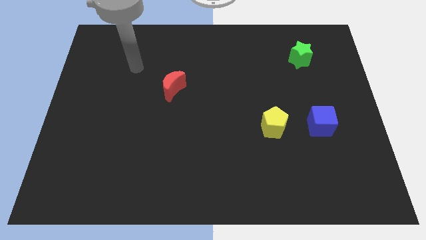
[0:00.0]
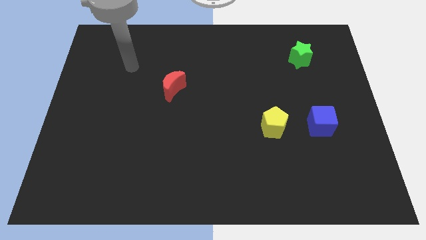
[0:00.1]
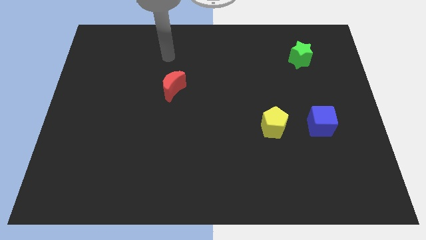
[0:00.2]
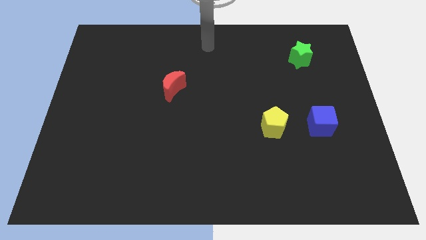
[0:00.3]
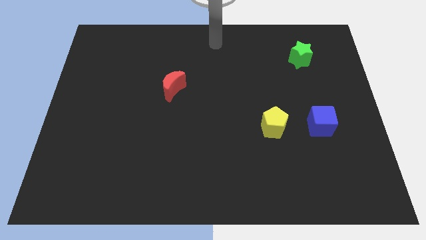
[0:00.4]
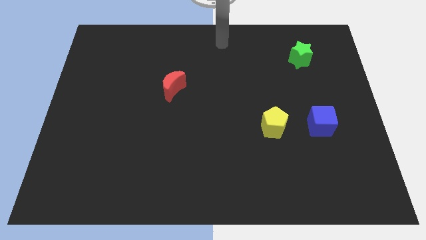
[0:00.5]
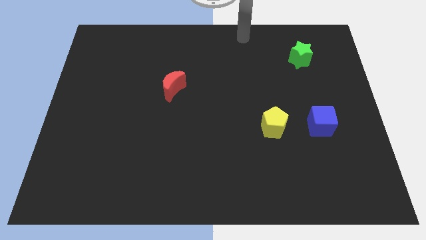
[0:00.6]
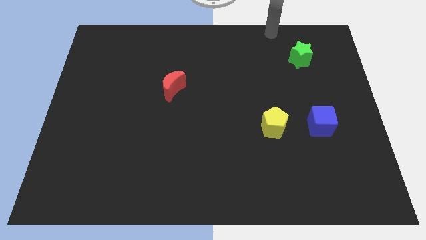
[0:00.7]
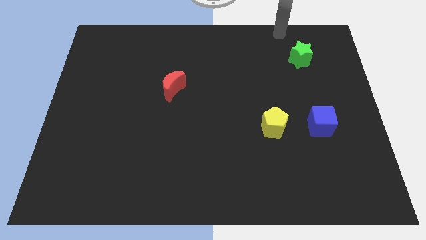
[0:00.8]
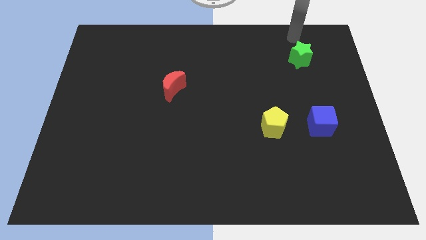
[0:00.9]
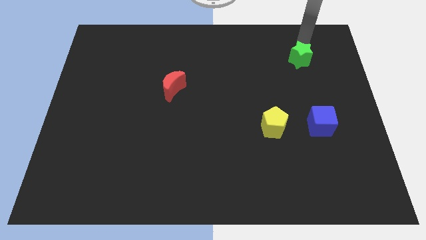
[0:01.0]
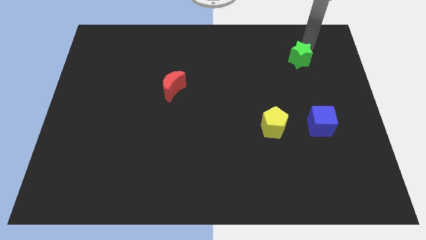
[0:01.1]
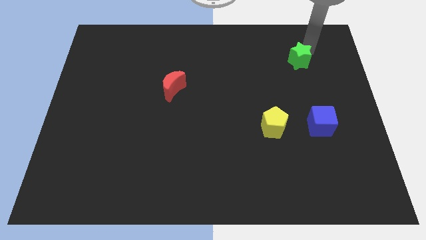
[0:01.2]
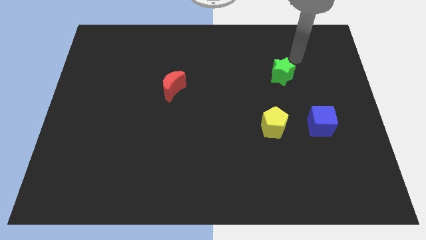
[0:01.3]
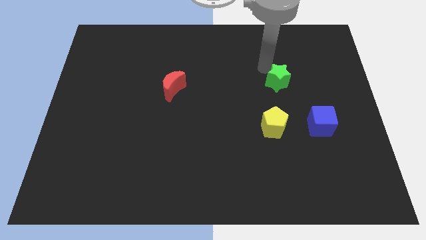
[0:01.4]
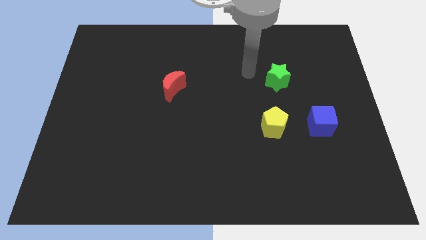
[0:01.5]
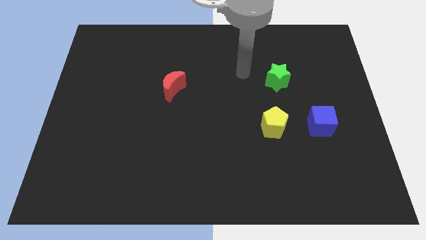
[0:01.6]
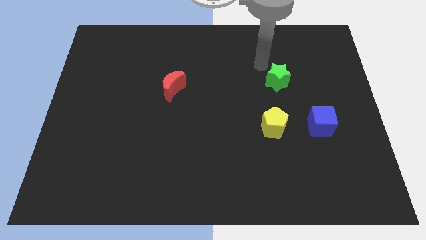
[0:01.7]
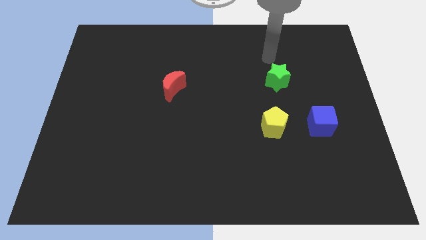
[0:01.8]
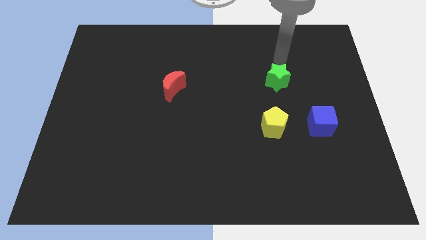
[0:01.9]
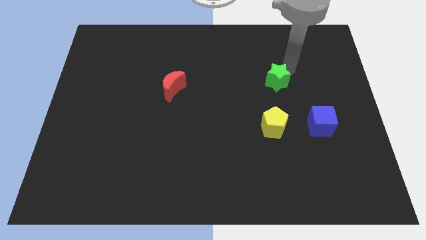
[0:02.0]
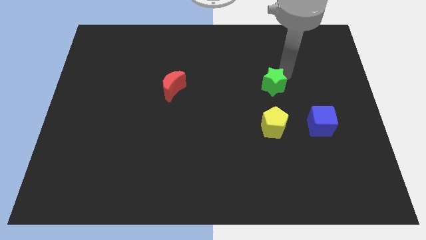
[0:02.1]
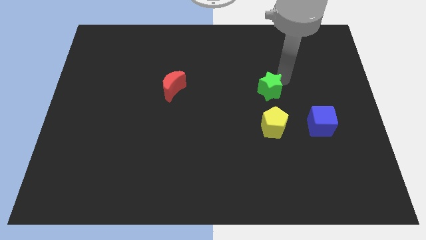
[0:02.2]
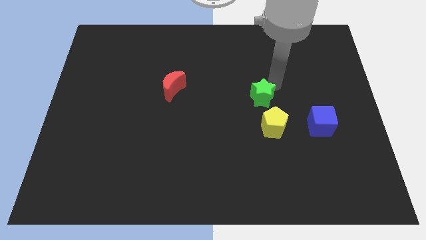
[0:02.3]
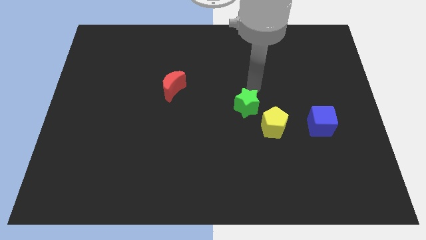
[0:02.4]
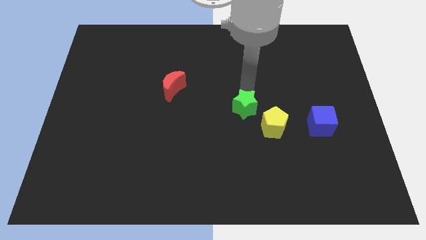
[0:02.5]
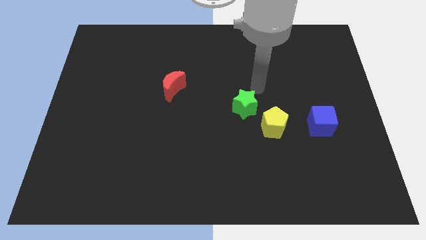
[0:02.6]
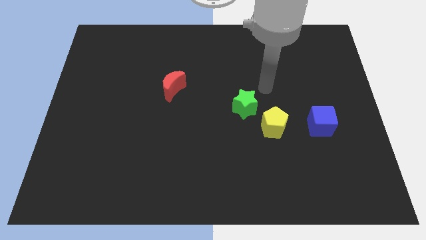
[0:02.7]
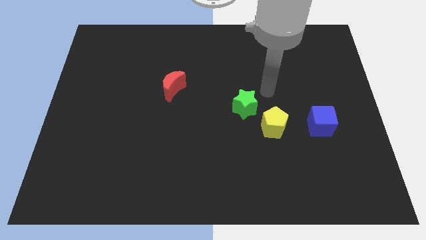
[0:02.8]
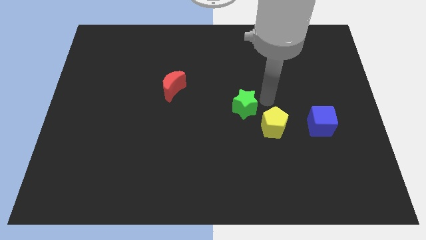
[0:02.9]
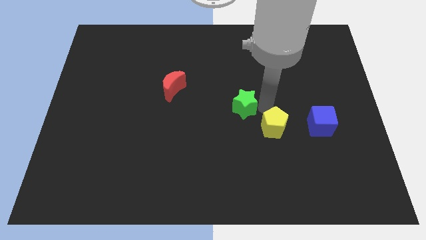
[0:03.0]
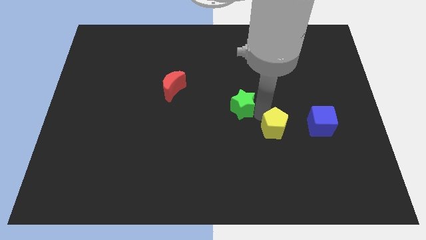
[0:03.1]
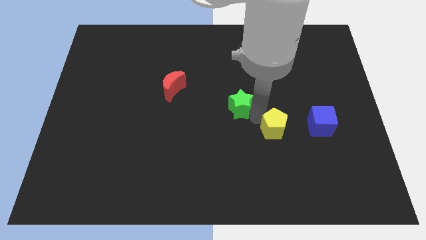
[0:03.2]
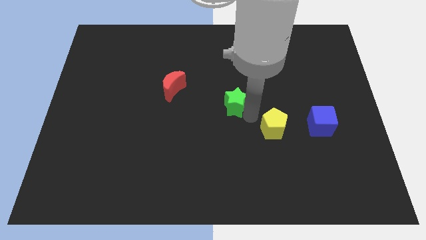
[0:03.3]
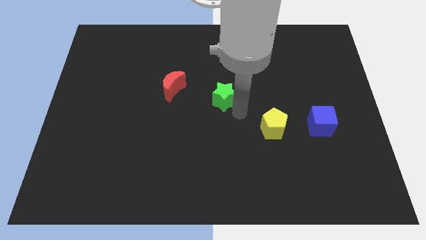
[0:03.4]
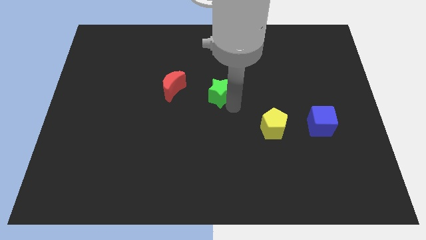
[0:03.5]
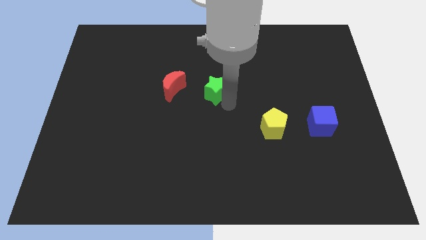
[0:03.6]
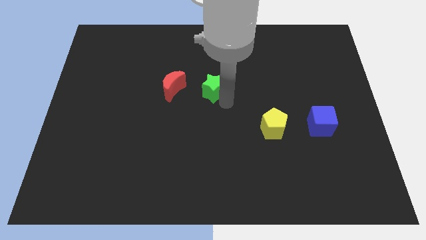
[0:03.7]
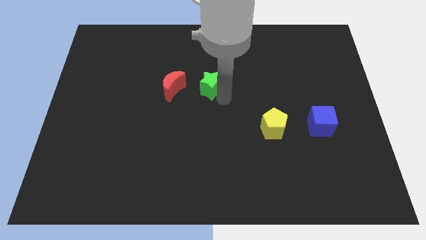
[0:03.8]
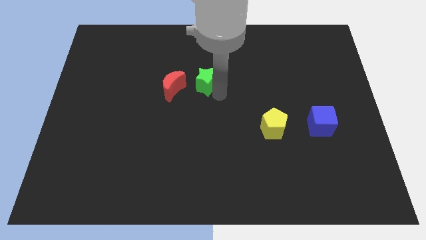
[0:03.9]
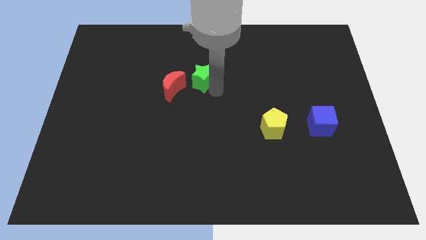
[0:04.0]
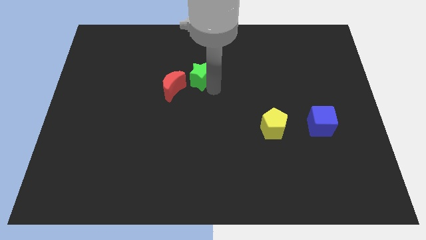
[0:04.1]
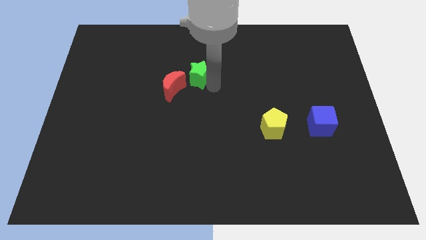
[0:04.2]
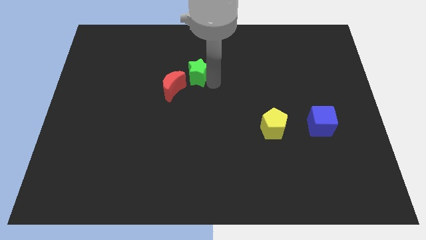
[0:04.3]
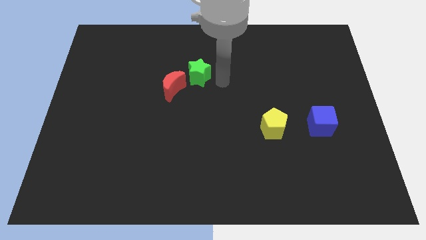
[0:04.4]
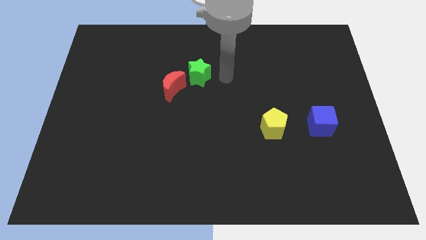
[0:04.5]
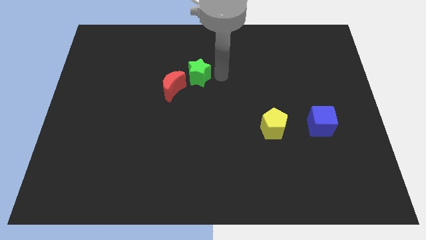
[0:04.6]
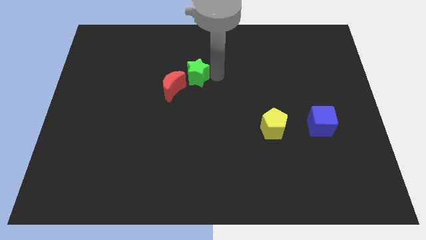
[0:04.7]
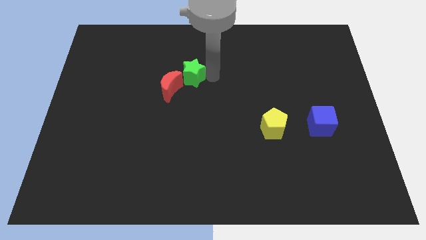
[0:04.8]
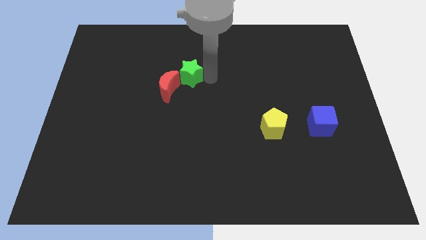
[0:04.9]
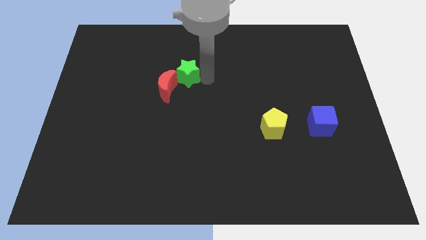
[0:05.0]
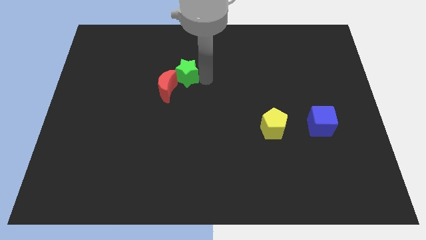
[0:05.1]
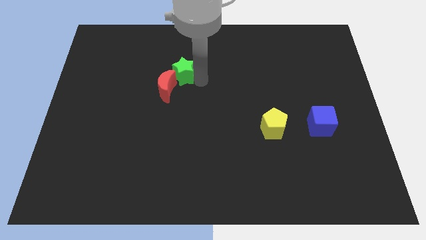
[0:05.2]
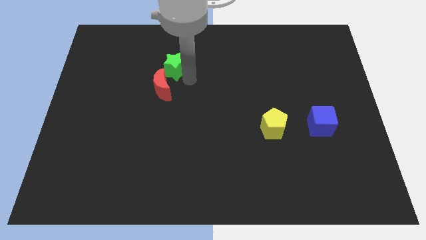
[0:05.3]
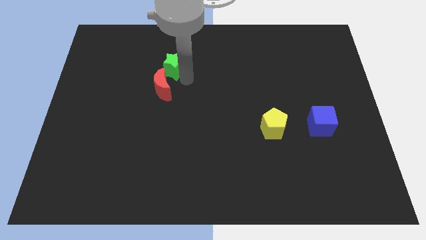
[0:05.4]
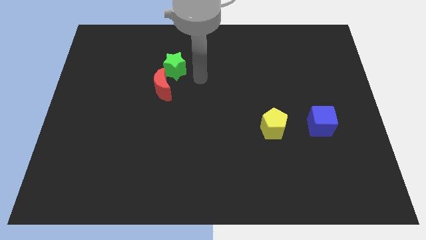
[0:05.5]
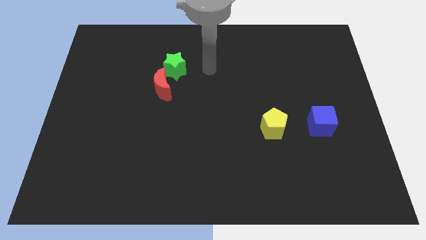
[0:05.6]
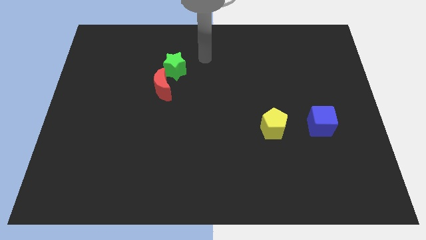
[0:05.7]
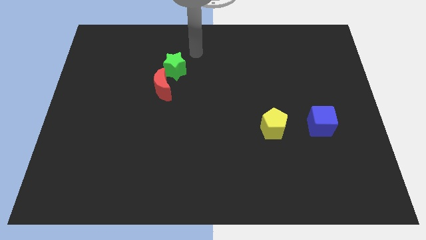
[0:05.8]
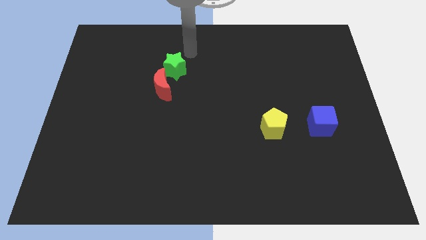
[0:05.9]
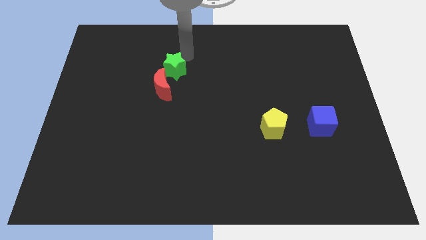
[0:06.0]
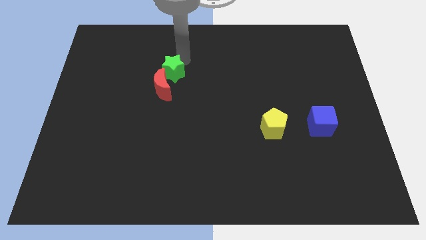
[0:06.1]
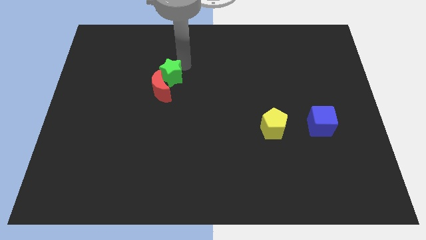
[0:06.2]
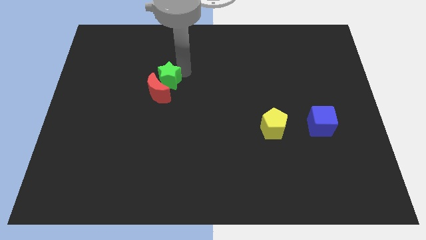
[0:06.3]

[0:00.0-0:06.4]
move the green block next to the red block

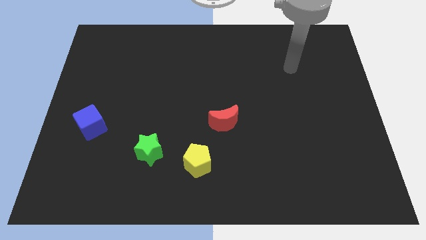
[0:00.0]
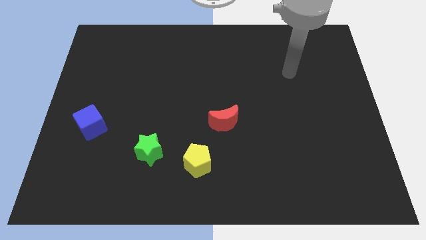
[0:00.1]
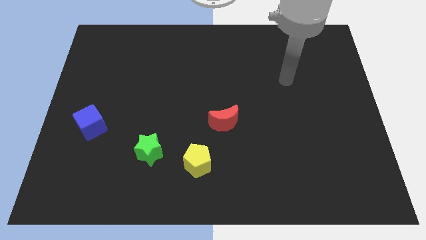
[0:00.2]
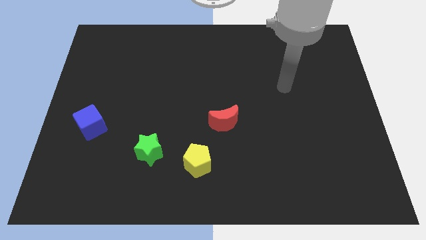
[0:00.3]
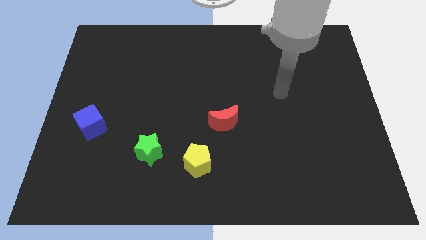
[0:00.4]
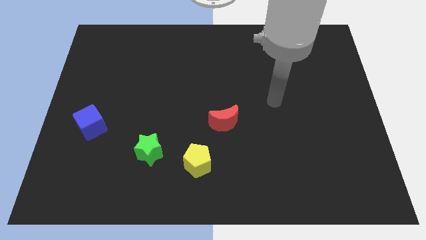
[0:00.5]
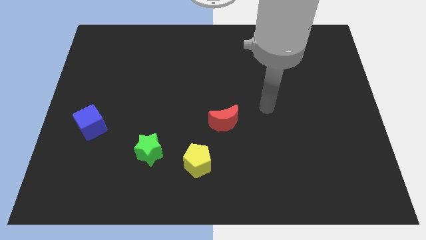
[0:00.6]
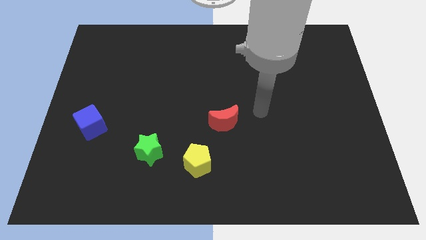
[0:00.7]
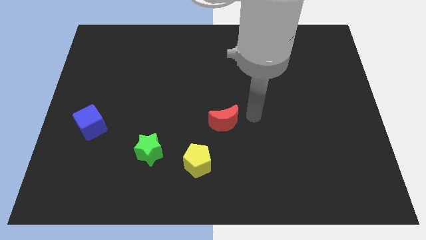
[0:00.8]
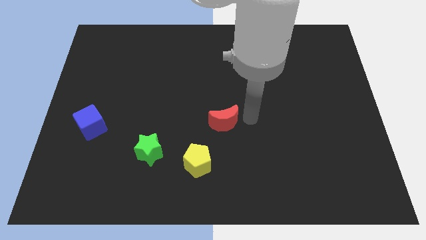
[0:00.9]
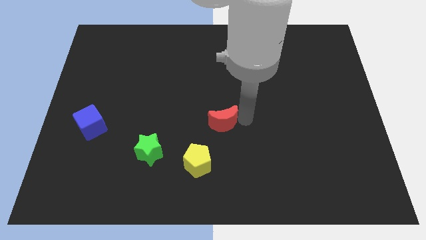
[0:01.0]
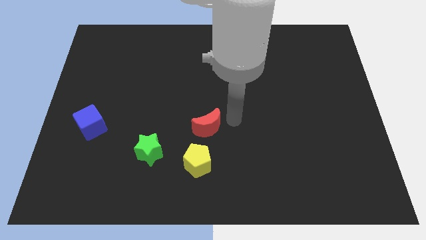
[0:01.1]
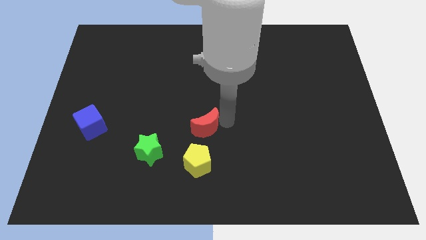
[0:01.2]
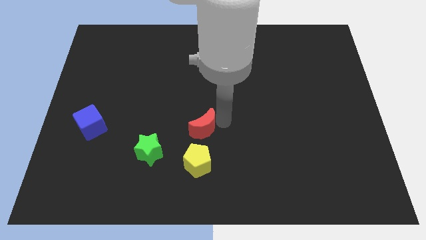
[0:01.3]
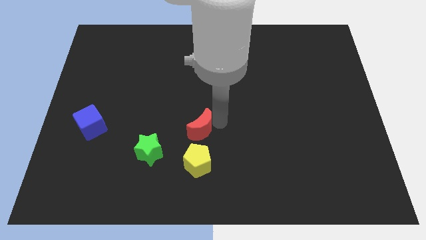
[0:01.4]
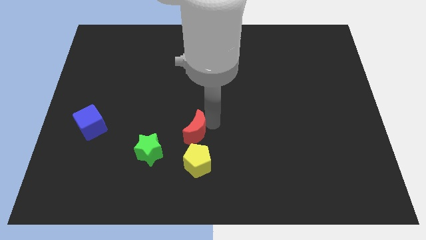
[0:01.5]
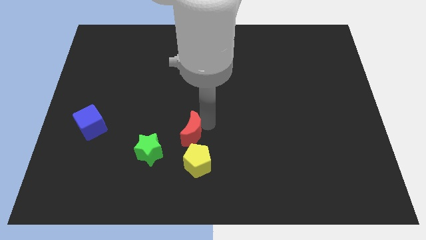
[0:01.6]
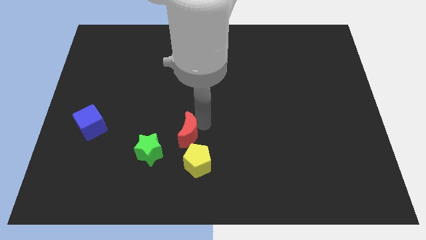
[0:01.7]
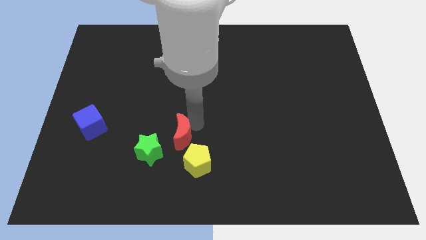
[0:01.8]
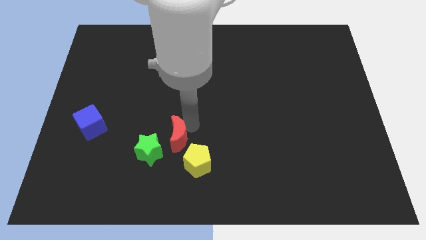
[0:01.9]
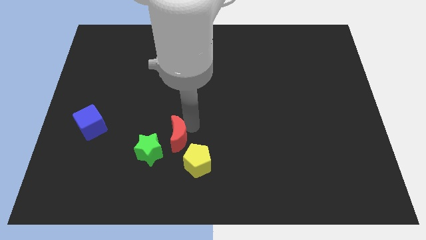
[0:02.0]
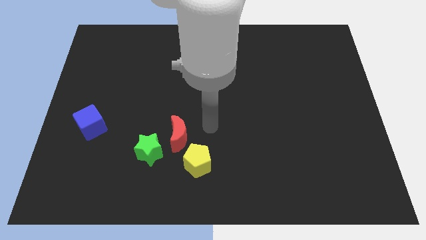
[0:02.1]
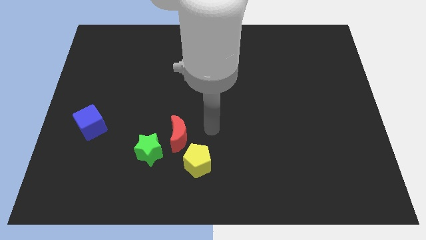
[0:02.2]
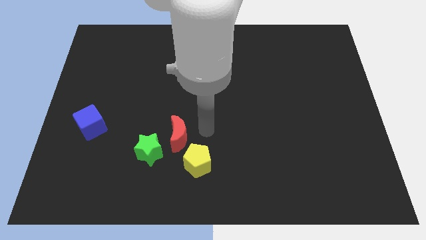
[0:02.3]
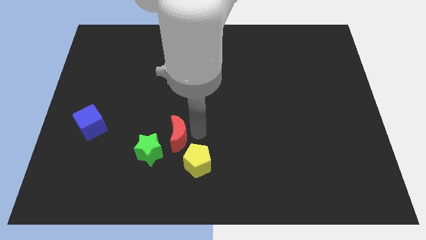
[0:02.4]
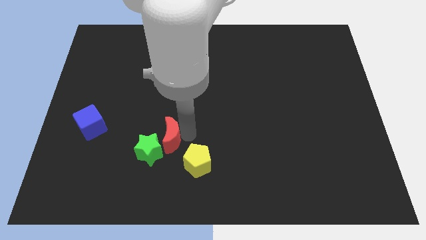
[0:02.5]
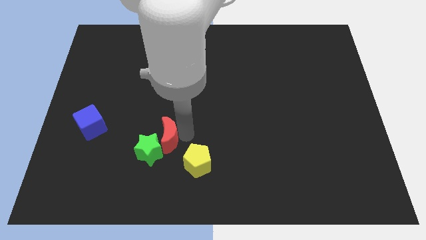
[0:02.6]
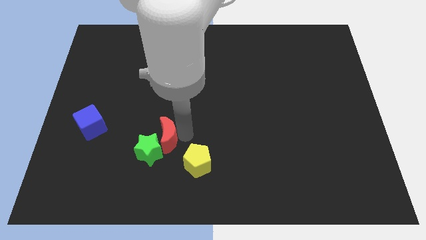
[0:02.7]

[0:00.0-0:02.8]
put the red block towards the green star
